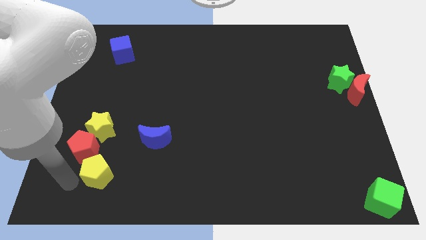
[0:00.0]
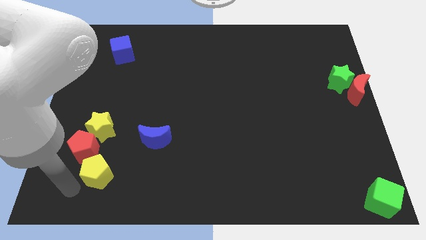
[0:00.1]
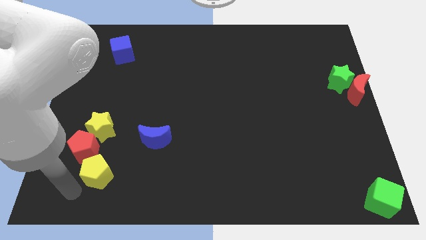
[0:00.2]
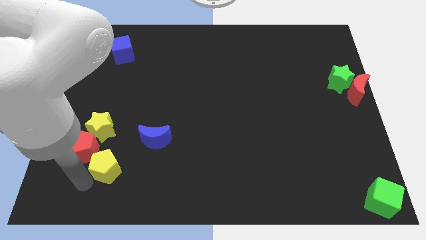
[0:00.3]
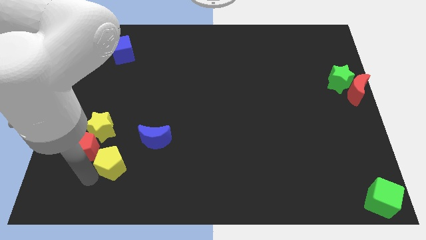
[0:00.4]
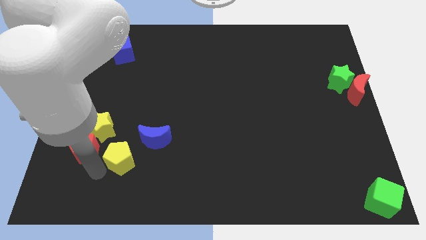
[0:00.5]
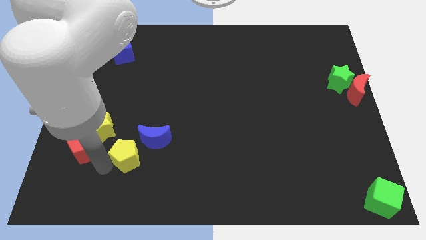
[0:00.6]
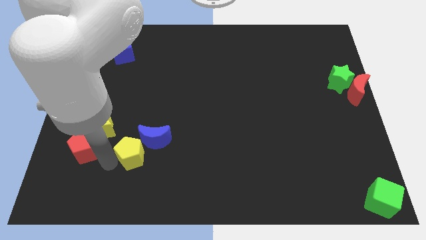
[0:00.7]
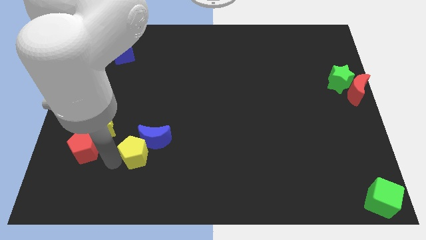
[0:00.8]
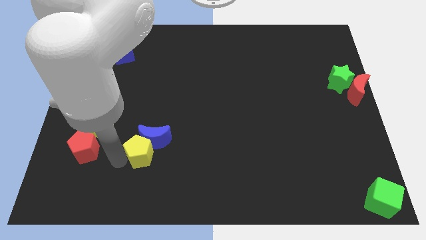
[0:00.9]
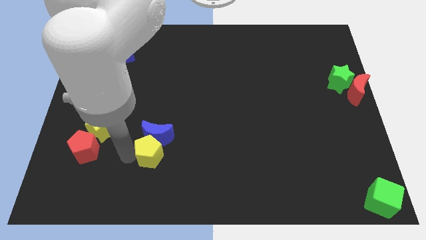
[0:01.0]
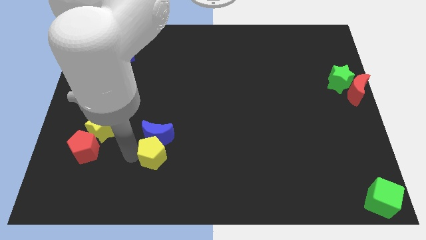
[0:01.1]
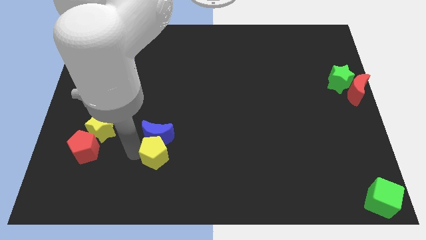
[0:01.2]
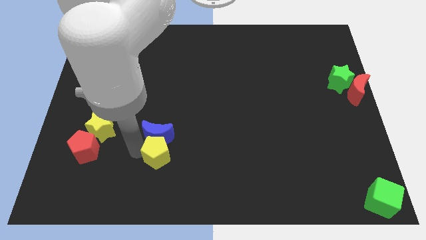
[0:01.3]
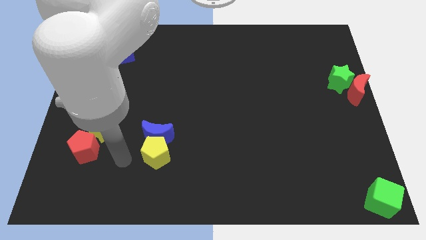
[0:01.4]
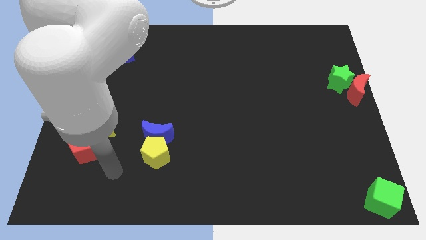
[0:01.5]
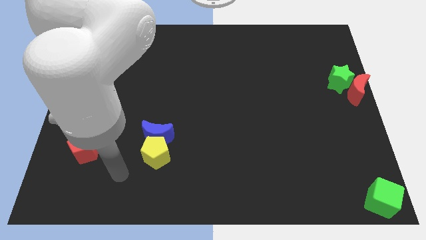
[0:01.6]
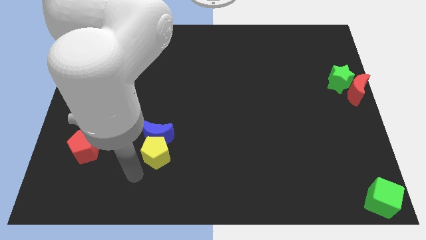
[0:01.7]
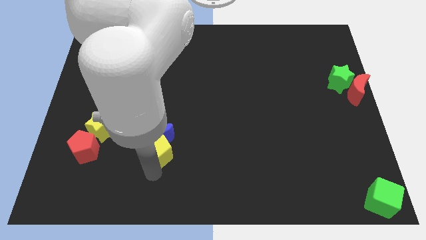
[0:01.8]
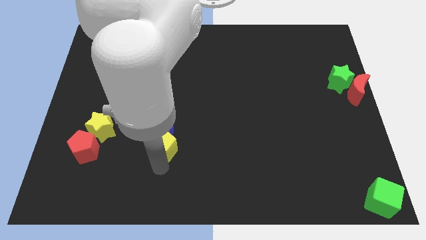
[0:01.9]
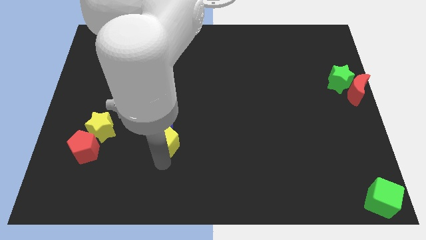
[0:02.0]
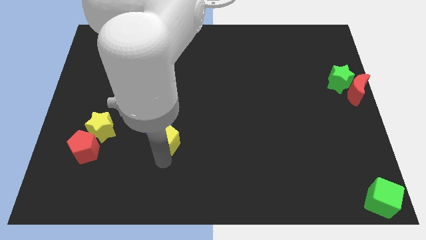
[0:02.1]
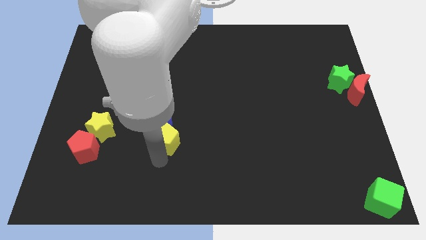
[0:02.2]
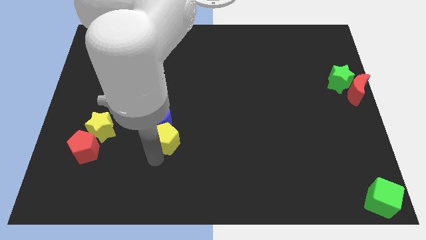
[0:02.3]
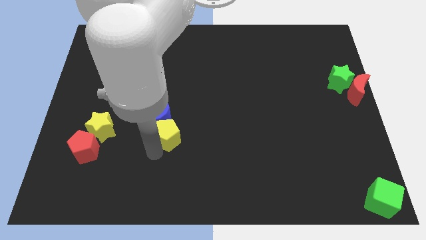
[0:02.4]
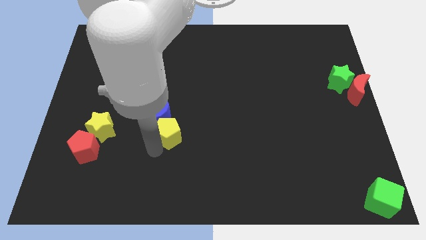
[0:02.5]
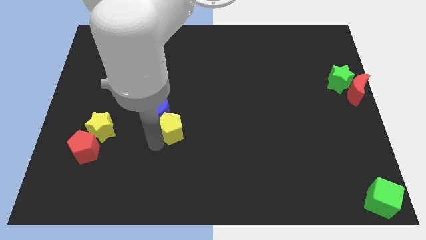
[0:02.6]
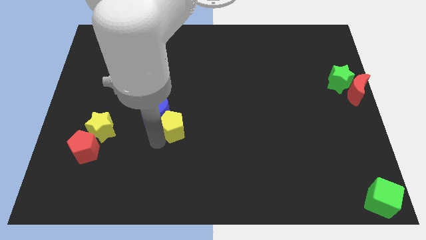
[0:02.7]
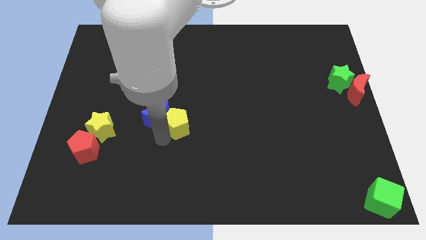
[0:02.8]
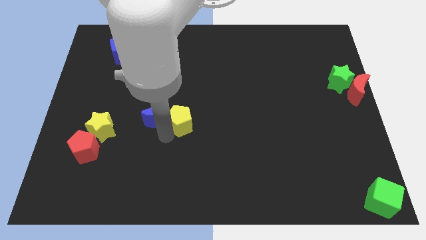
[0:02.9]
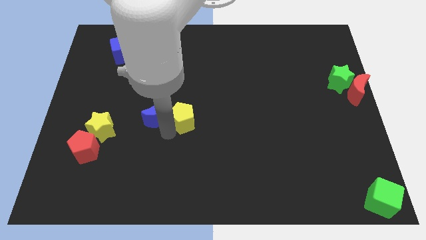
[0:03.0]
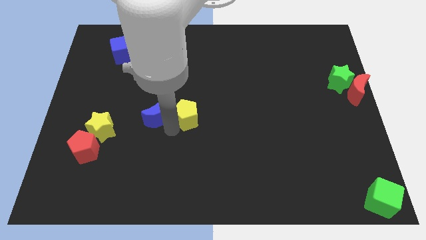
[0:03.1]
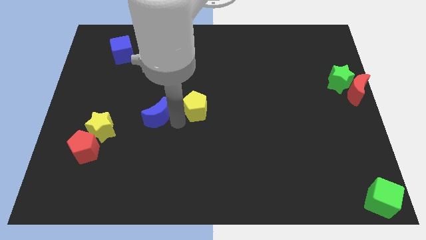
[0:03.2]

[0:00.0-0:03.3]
push blue crescent with yellow pentagon

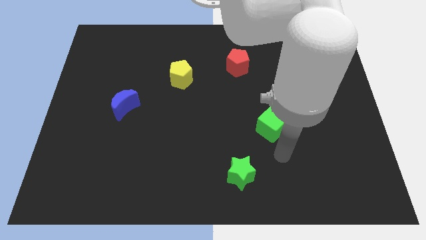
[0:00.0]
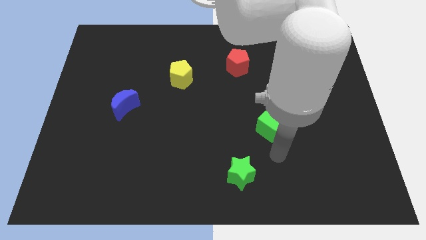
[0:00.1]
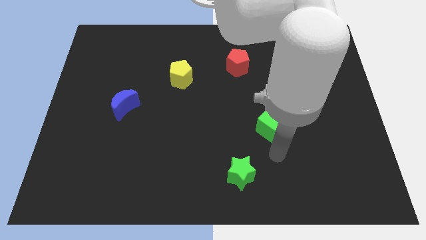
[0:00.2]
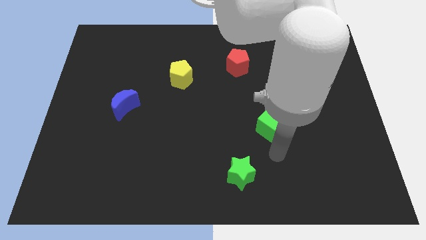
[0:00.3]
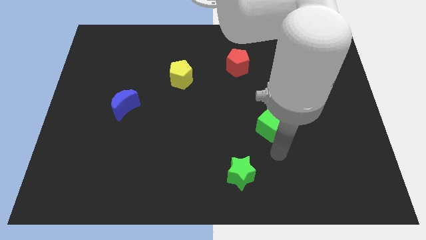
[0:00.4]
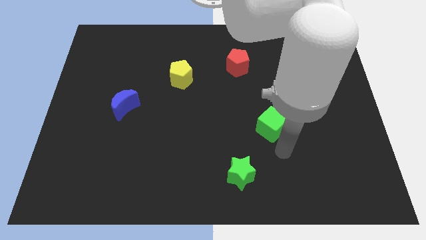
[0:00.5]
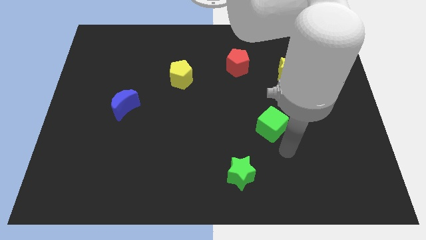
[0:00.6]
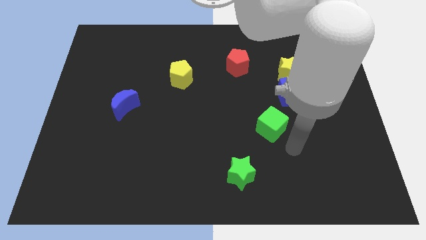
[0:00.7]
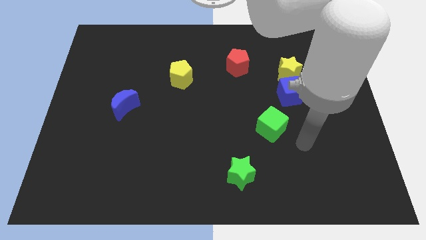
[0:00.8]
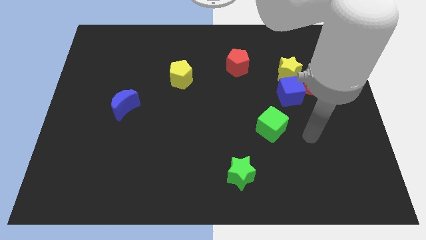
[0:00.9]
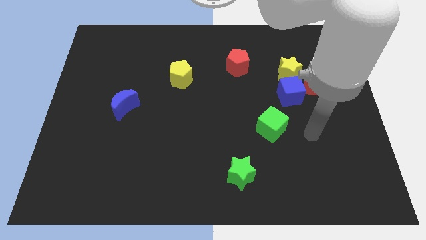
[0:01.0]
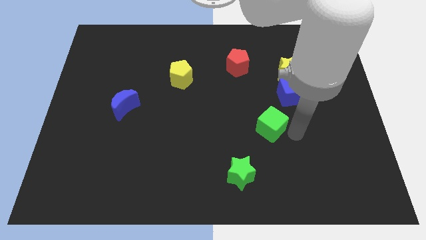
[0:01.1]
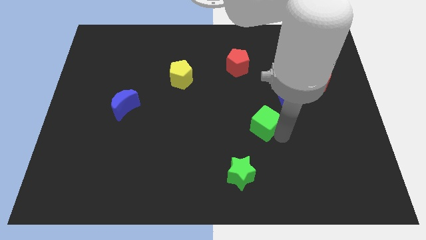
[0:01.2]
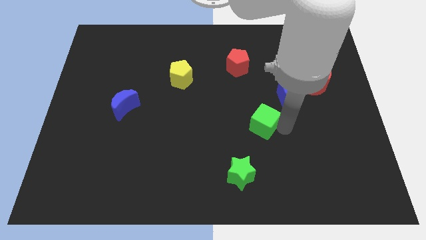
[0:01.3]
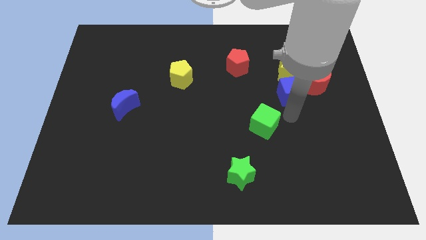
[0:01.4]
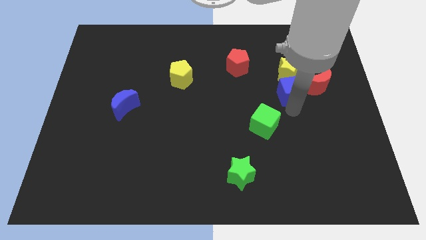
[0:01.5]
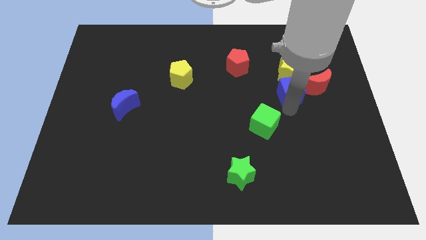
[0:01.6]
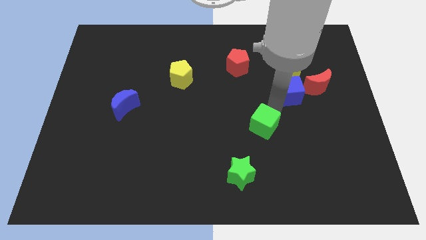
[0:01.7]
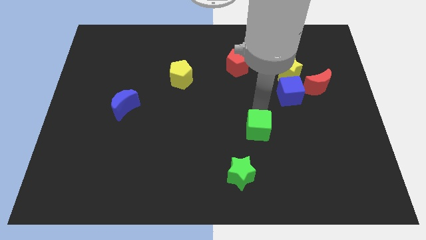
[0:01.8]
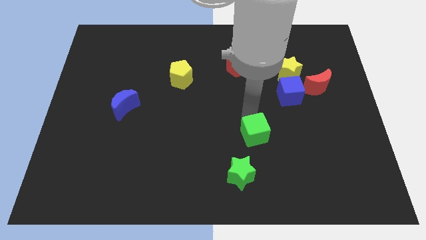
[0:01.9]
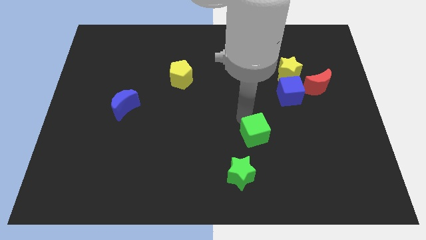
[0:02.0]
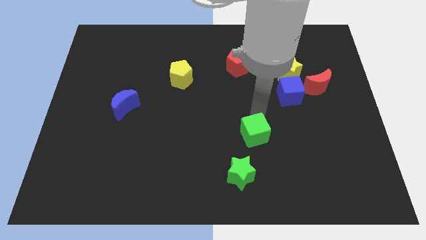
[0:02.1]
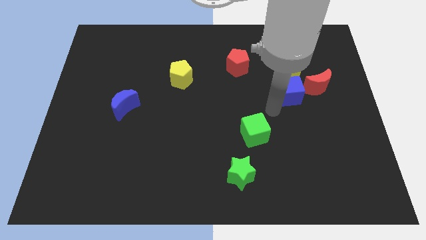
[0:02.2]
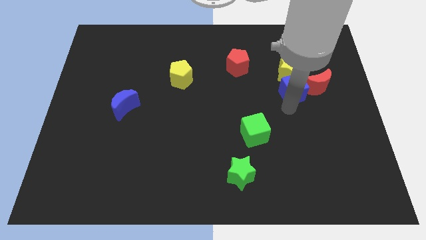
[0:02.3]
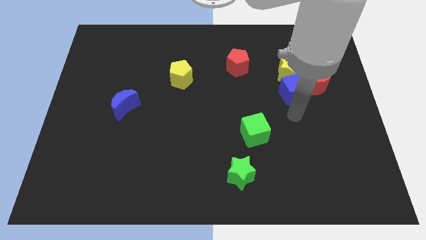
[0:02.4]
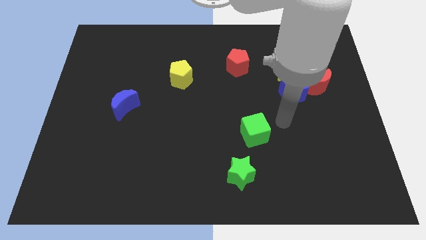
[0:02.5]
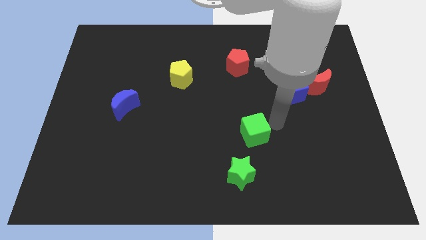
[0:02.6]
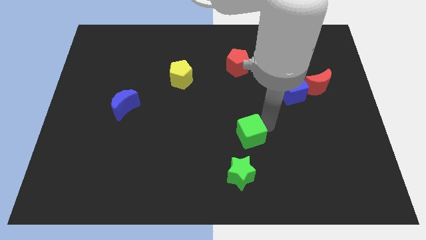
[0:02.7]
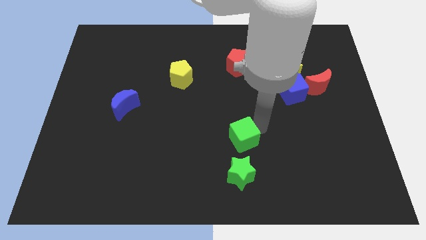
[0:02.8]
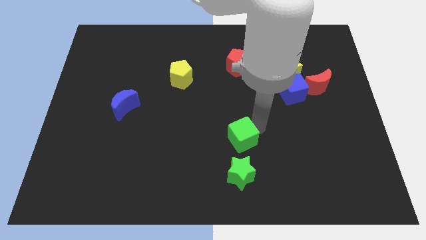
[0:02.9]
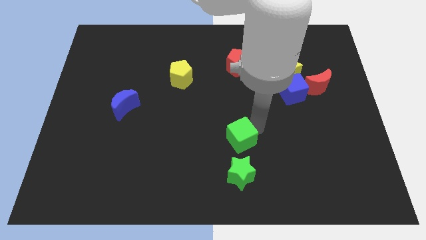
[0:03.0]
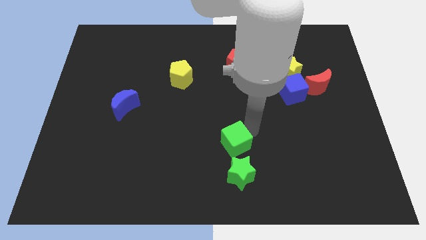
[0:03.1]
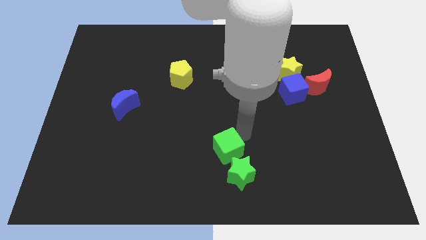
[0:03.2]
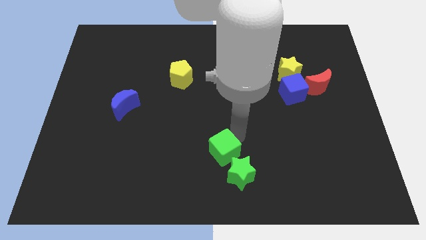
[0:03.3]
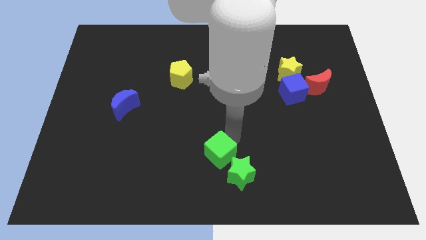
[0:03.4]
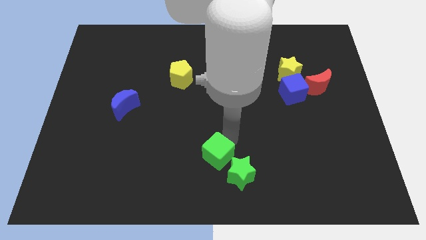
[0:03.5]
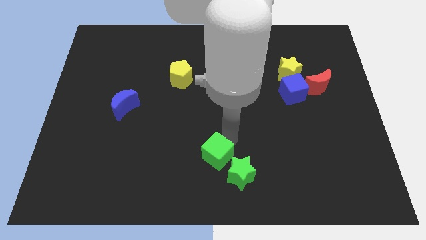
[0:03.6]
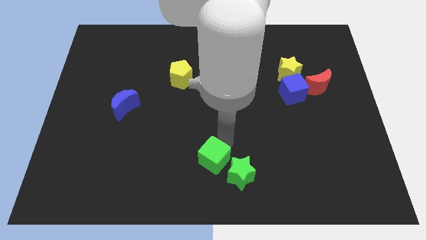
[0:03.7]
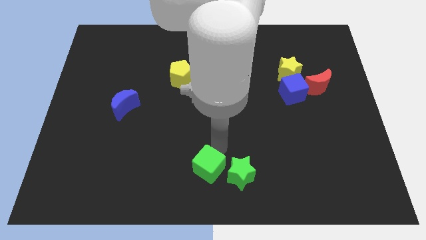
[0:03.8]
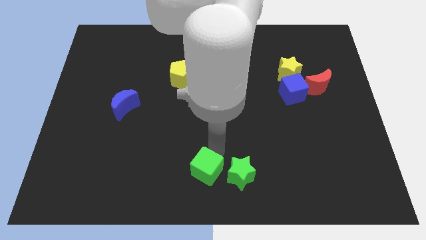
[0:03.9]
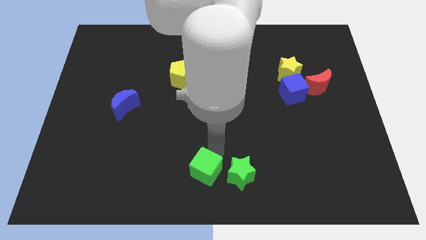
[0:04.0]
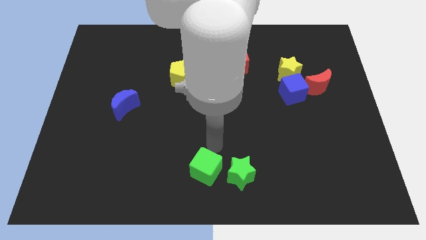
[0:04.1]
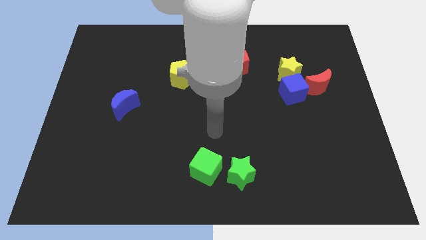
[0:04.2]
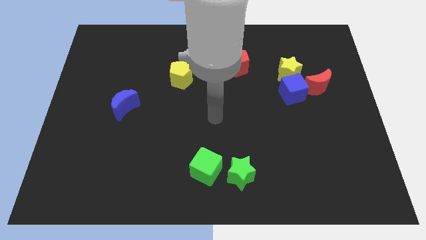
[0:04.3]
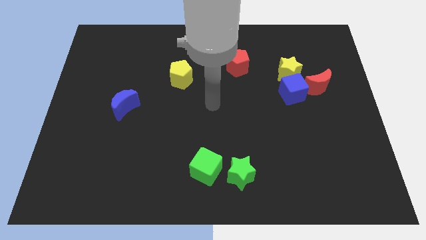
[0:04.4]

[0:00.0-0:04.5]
push the green cube downward

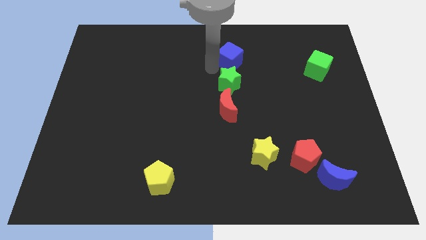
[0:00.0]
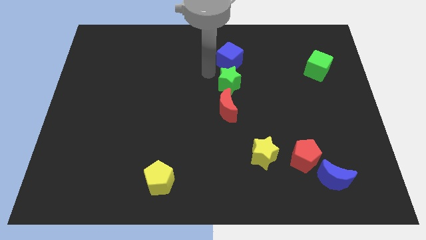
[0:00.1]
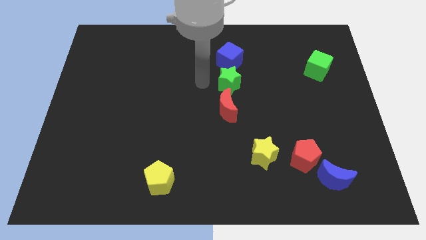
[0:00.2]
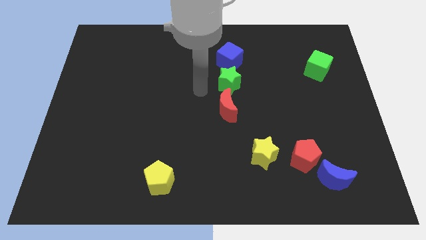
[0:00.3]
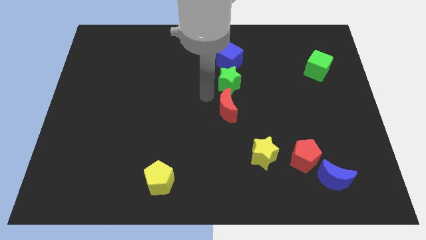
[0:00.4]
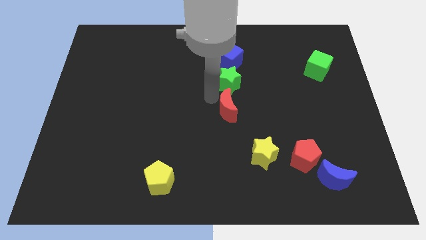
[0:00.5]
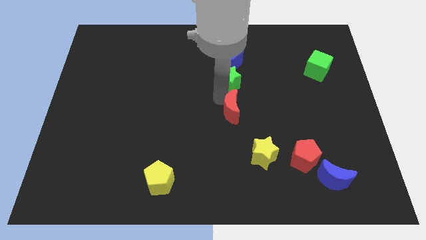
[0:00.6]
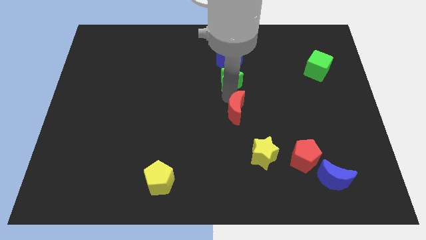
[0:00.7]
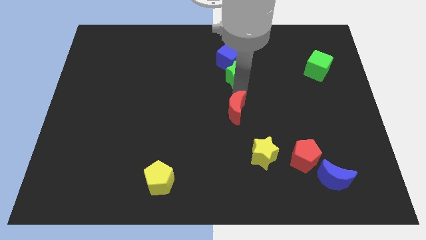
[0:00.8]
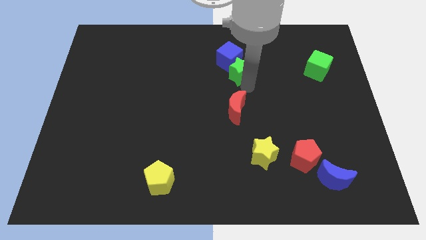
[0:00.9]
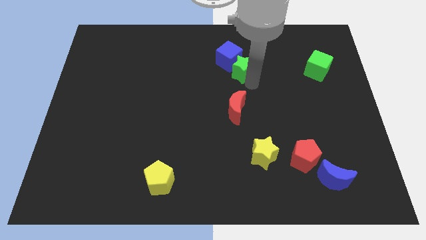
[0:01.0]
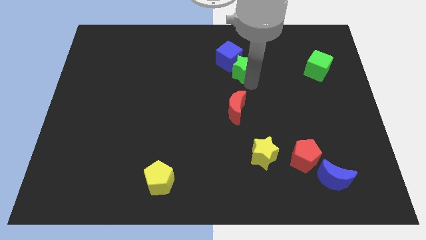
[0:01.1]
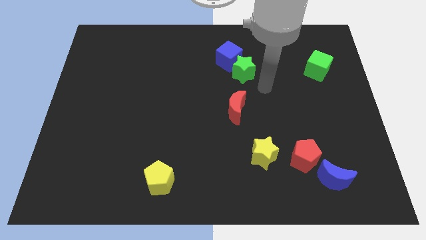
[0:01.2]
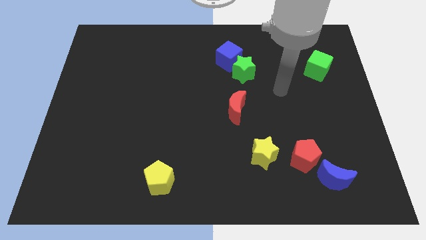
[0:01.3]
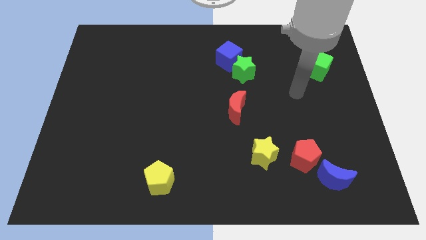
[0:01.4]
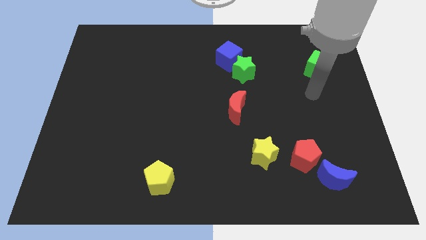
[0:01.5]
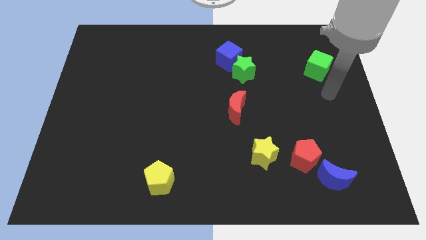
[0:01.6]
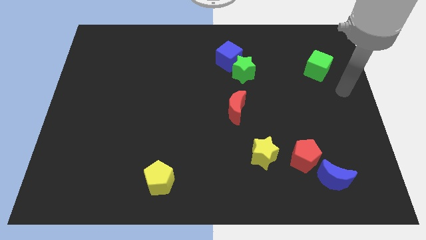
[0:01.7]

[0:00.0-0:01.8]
push the green star to the bottom right side of the blue cube
